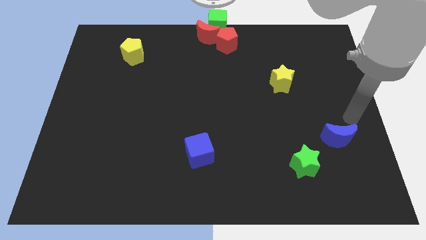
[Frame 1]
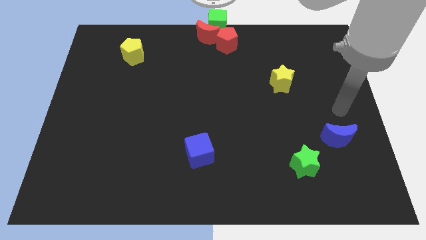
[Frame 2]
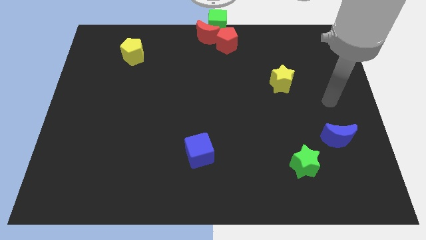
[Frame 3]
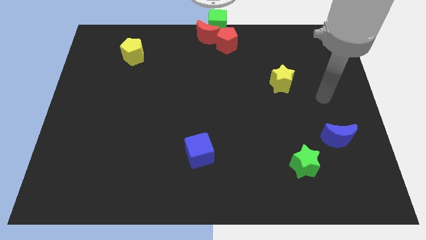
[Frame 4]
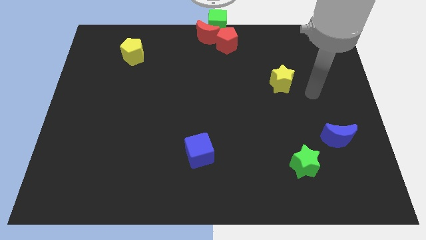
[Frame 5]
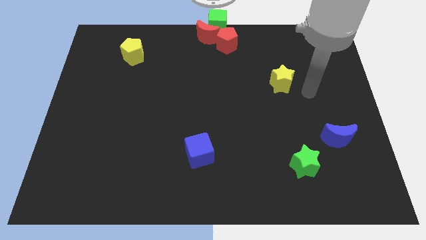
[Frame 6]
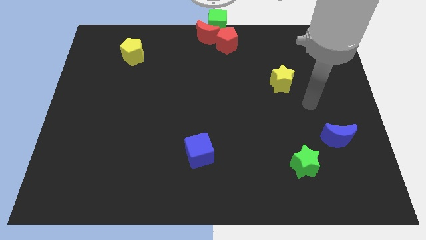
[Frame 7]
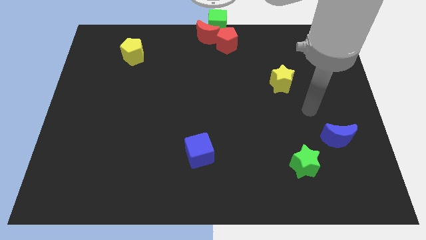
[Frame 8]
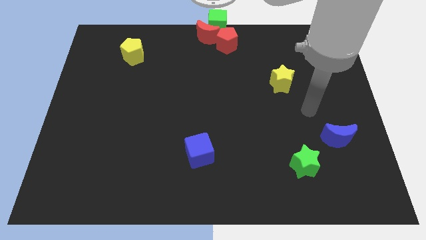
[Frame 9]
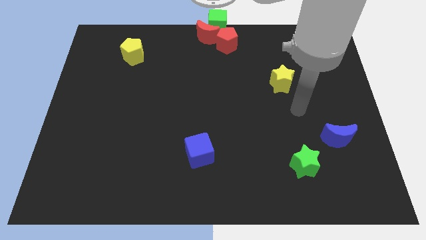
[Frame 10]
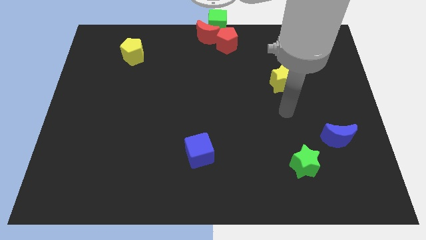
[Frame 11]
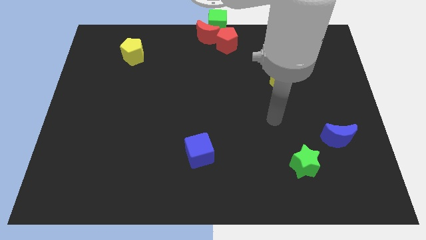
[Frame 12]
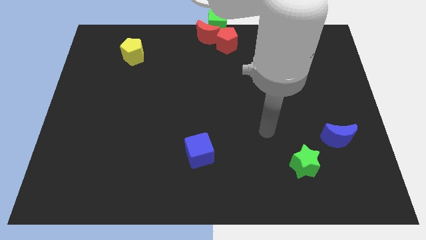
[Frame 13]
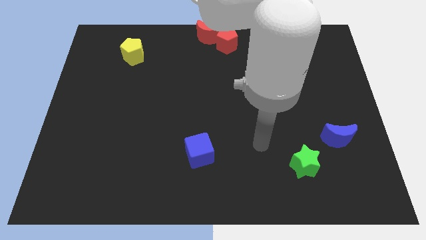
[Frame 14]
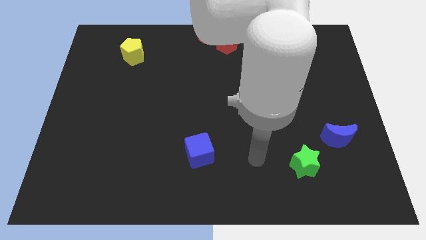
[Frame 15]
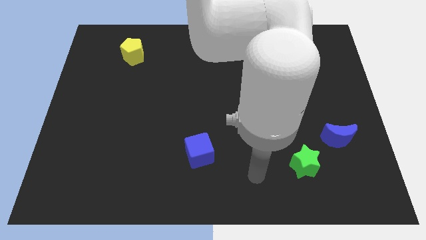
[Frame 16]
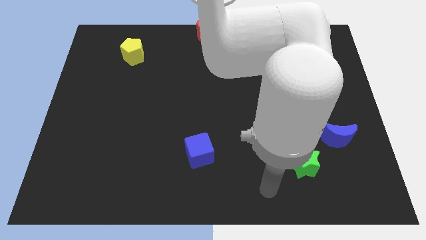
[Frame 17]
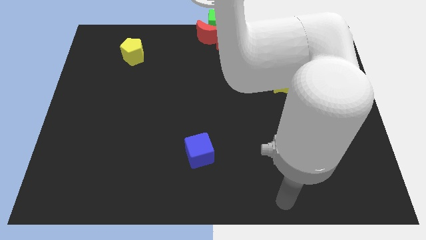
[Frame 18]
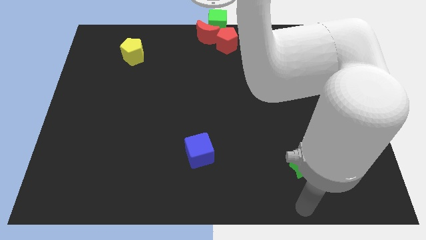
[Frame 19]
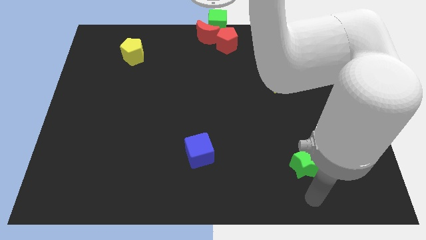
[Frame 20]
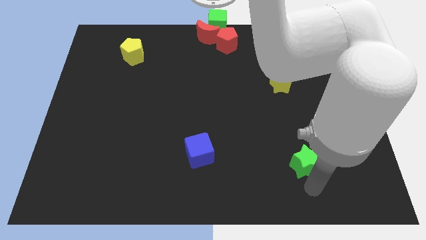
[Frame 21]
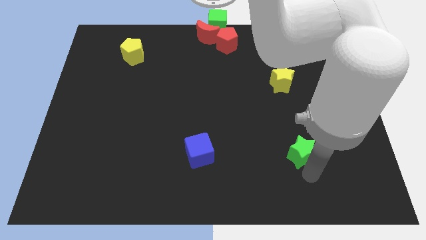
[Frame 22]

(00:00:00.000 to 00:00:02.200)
point your arm towards the bottom of the green star

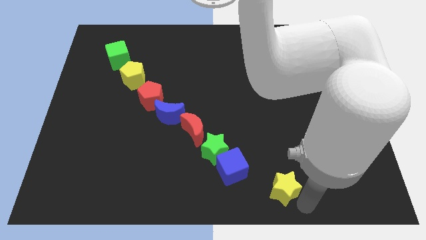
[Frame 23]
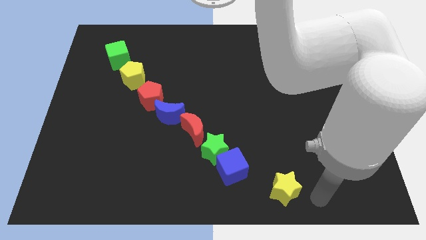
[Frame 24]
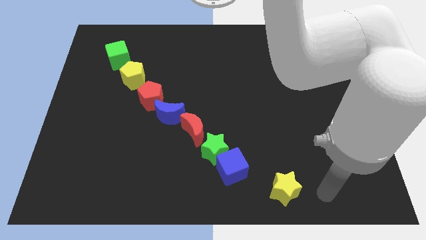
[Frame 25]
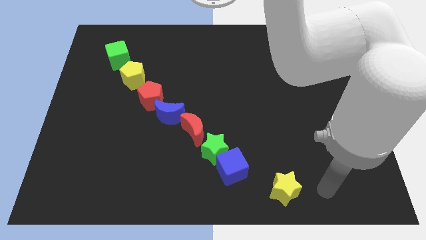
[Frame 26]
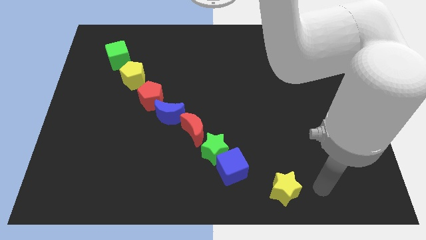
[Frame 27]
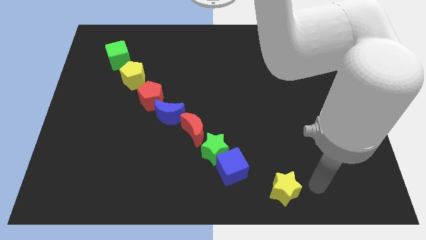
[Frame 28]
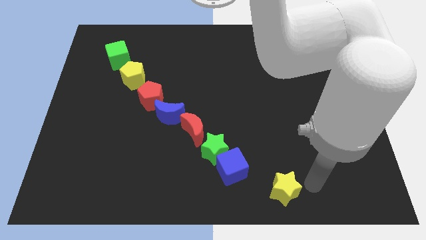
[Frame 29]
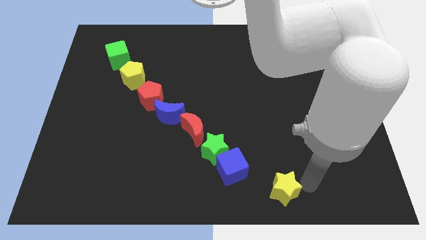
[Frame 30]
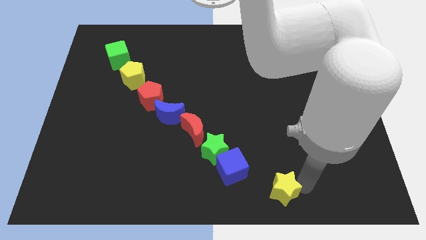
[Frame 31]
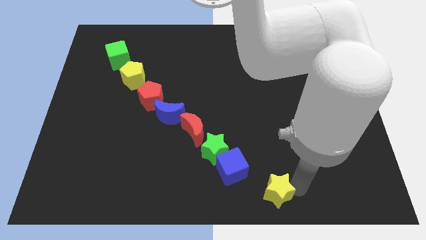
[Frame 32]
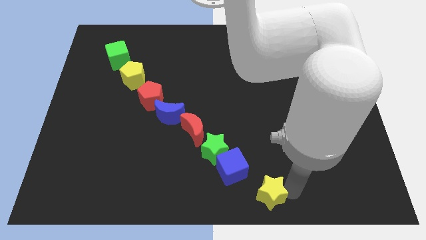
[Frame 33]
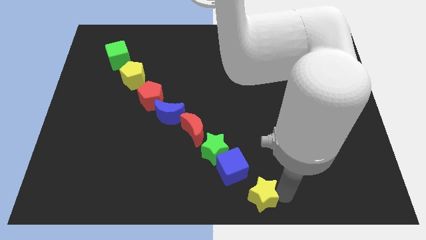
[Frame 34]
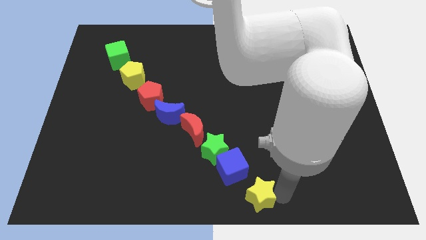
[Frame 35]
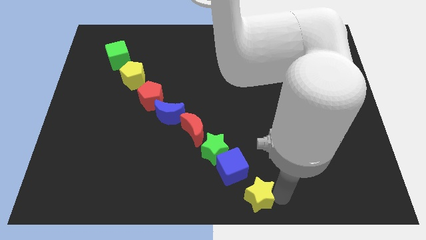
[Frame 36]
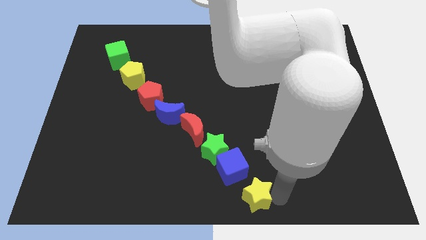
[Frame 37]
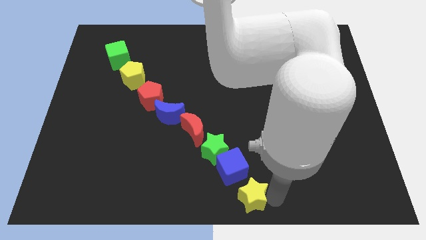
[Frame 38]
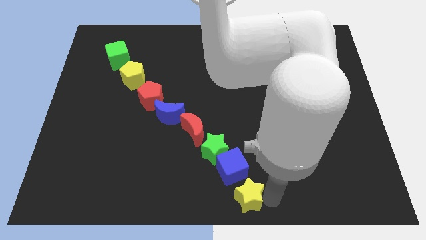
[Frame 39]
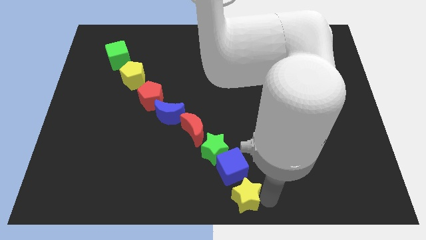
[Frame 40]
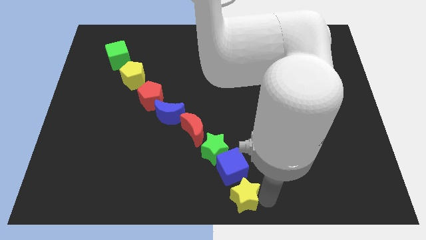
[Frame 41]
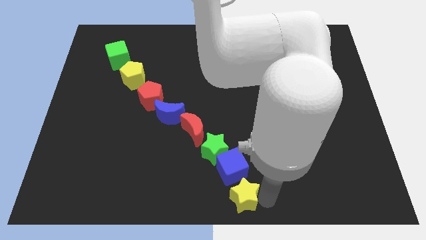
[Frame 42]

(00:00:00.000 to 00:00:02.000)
place the yellow star to the bottom of the blue cube

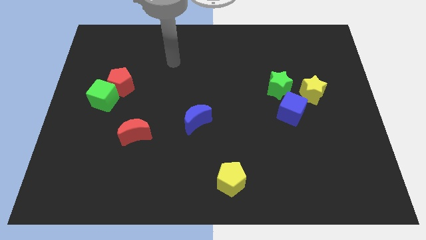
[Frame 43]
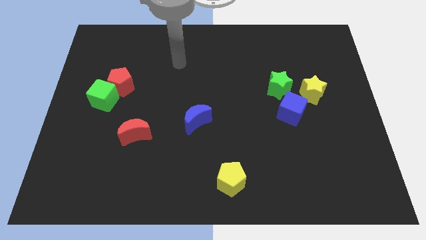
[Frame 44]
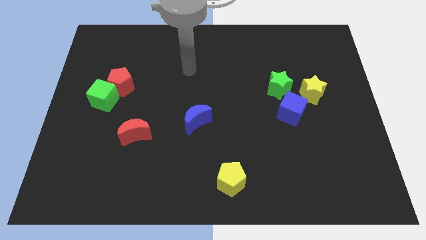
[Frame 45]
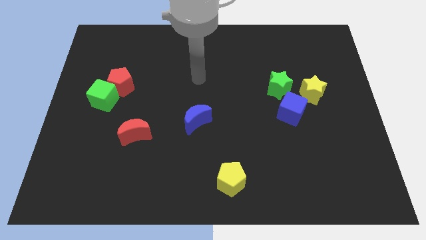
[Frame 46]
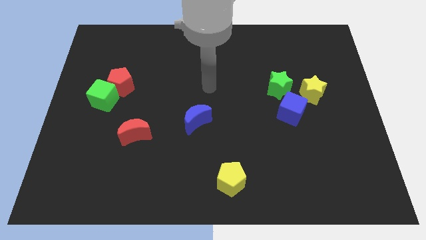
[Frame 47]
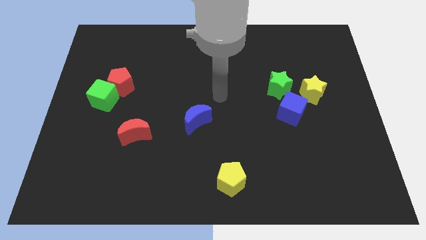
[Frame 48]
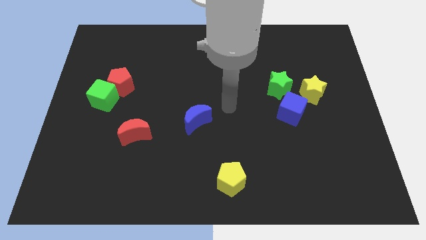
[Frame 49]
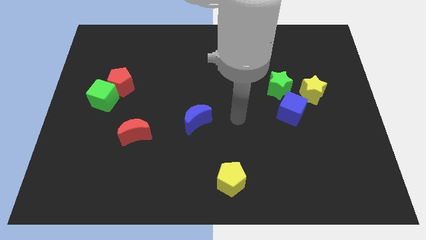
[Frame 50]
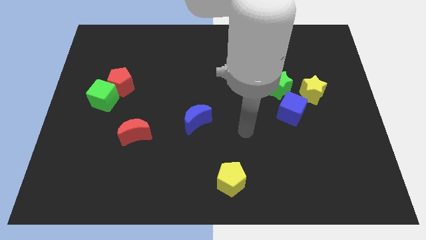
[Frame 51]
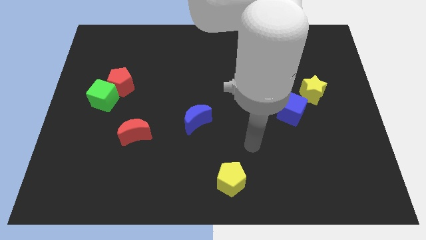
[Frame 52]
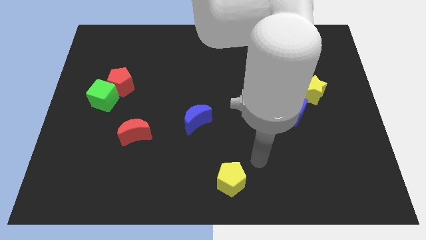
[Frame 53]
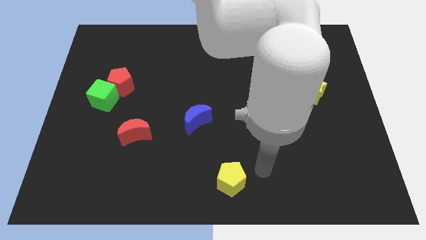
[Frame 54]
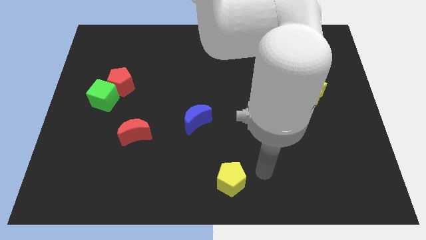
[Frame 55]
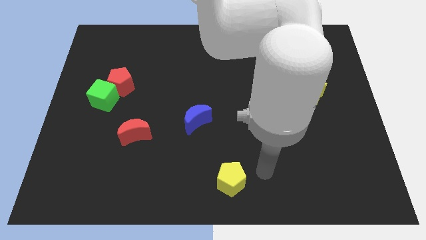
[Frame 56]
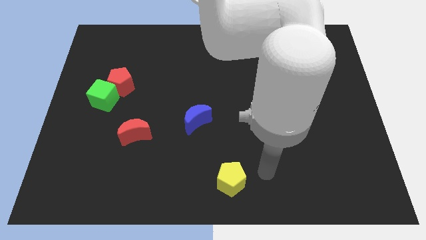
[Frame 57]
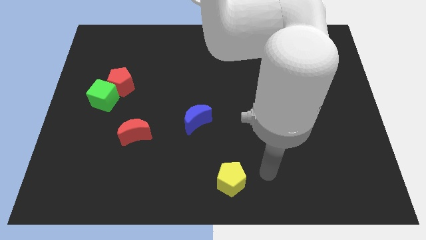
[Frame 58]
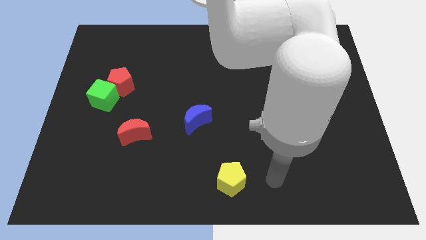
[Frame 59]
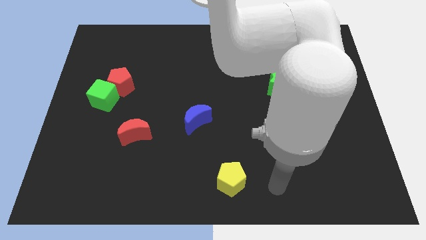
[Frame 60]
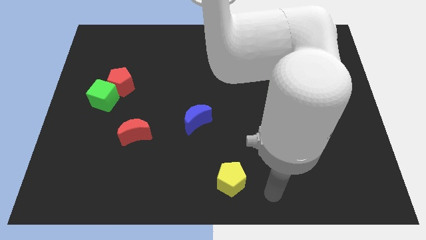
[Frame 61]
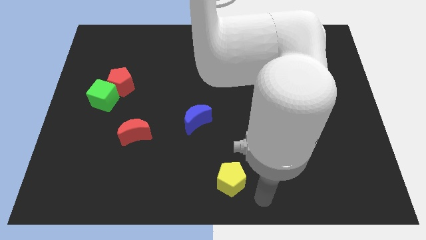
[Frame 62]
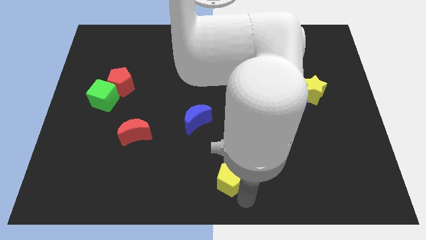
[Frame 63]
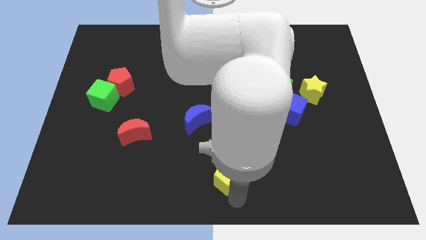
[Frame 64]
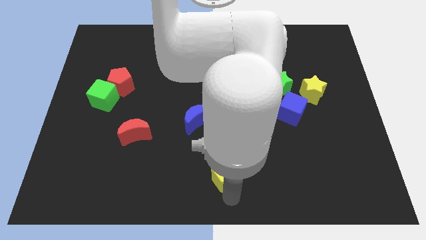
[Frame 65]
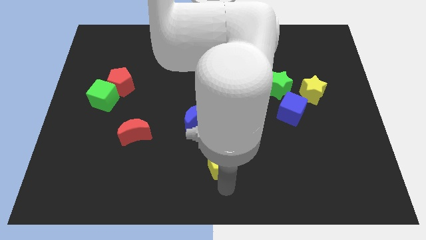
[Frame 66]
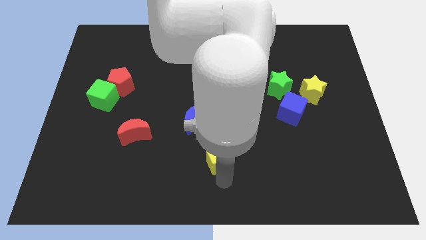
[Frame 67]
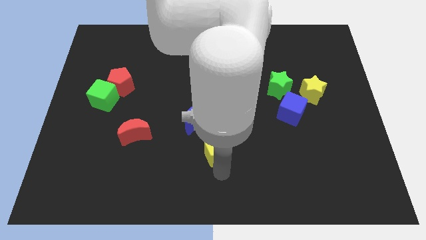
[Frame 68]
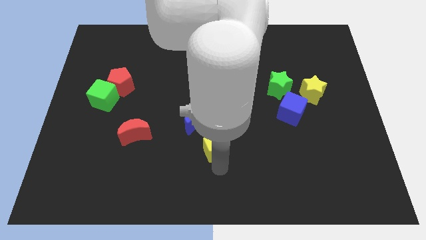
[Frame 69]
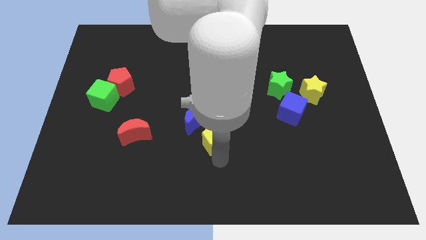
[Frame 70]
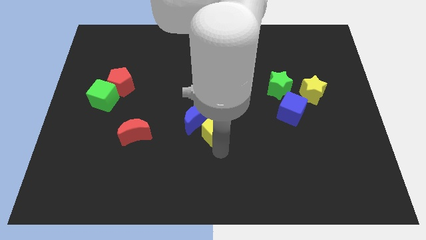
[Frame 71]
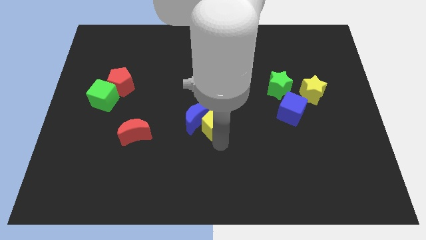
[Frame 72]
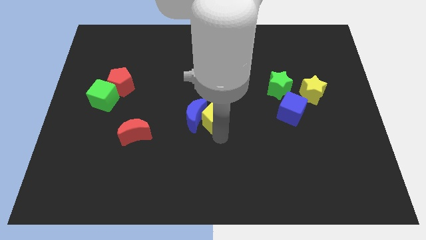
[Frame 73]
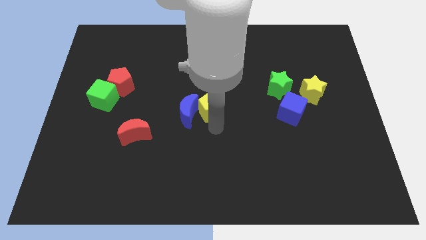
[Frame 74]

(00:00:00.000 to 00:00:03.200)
put the yellow pentagon right to the blue moon

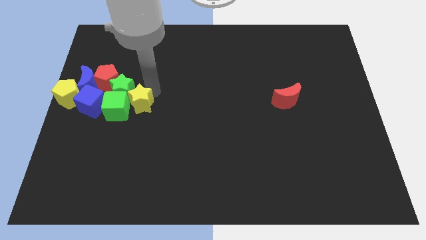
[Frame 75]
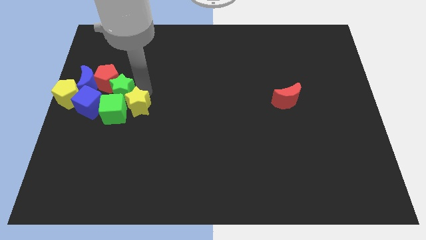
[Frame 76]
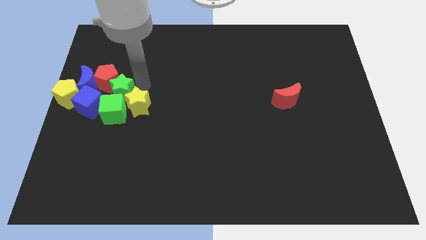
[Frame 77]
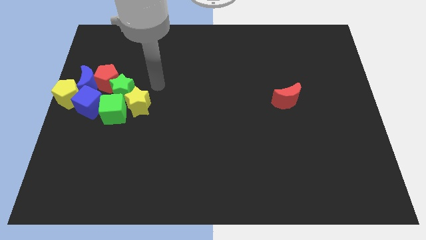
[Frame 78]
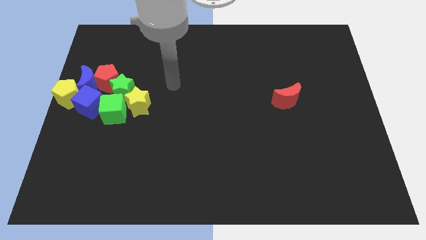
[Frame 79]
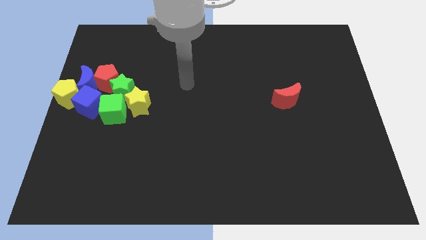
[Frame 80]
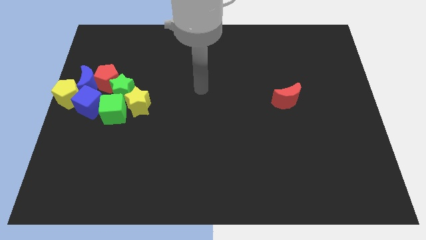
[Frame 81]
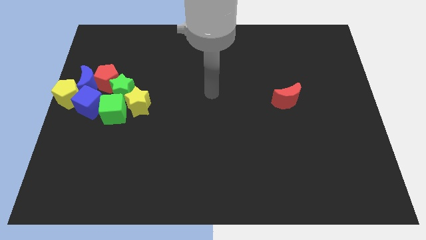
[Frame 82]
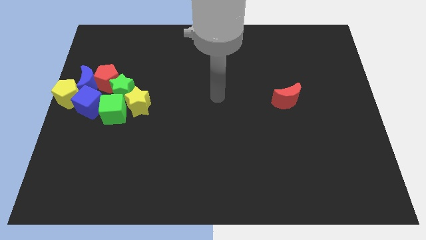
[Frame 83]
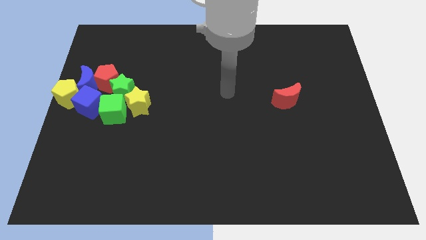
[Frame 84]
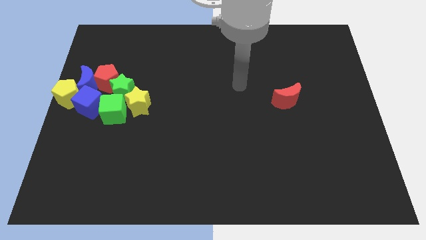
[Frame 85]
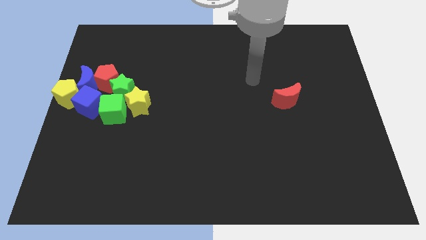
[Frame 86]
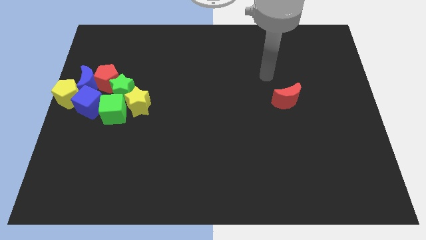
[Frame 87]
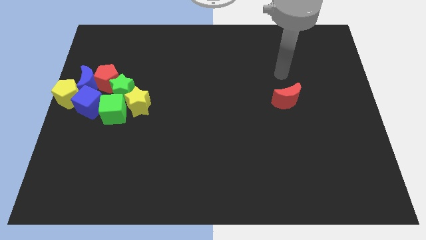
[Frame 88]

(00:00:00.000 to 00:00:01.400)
add the yellow star into the group of blocks at the center left
